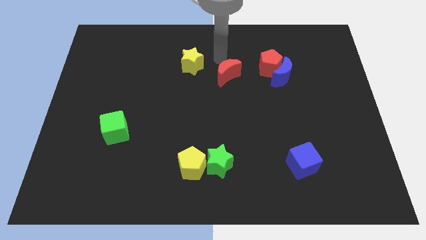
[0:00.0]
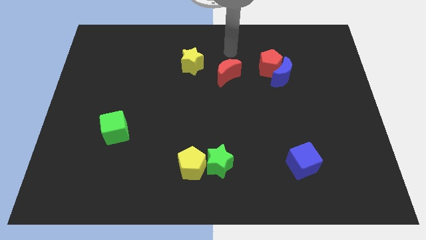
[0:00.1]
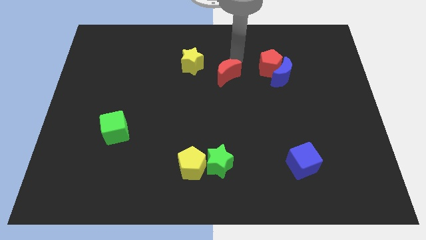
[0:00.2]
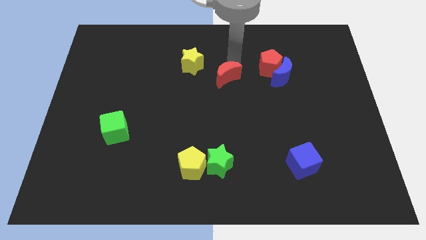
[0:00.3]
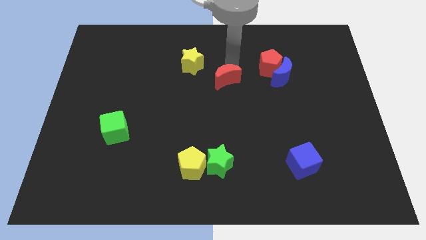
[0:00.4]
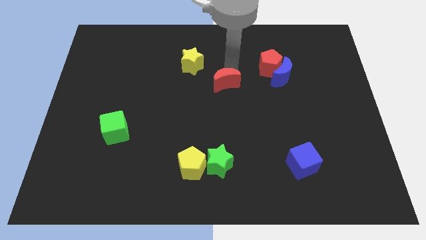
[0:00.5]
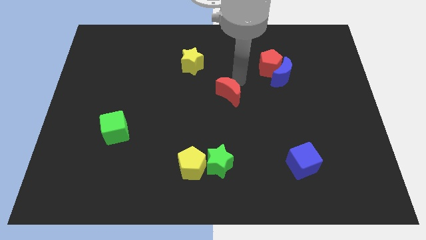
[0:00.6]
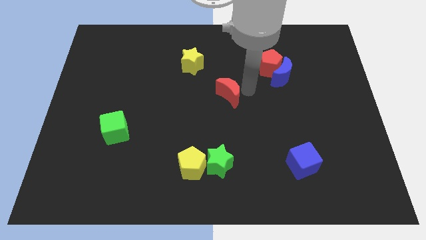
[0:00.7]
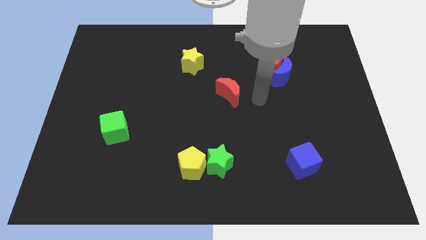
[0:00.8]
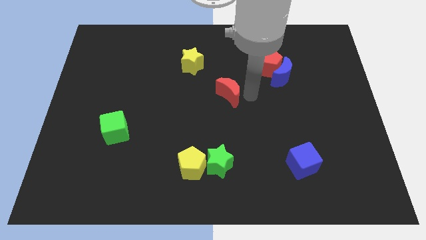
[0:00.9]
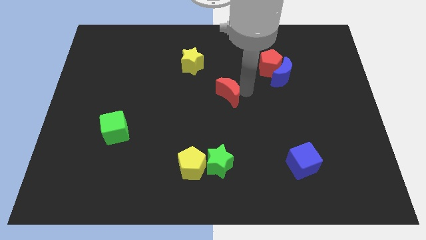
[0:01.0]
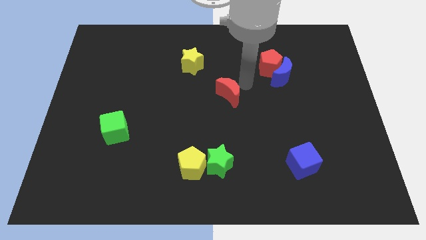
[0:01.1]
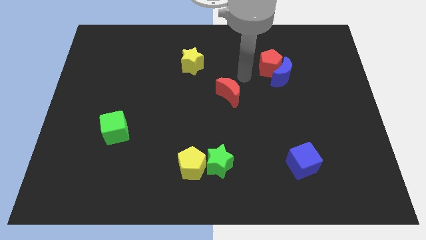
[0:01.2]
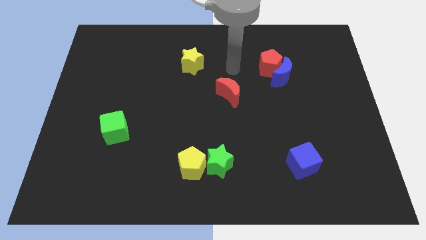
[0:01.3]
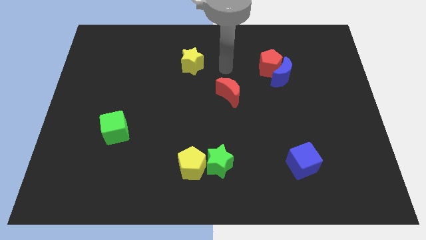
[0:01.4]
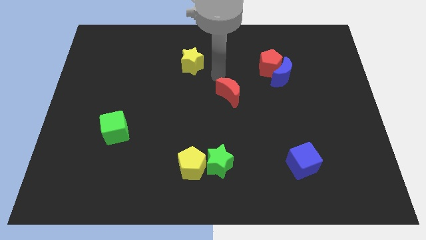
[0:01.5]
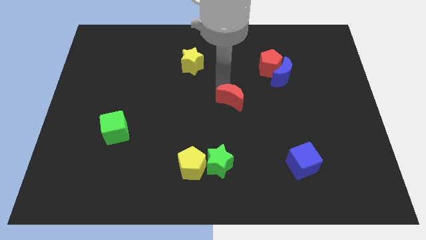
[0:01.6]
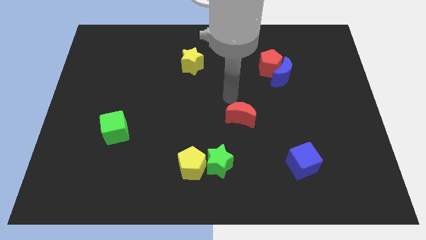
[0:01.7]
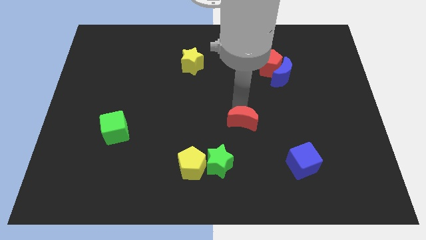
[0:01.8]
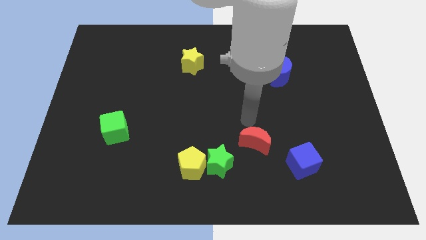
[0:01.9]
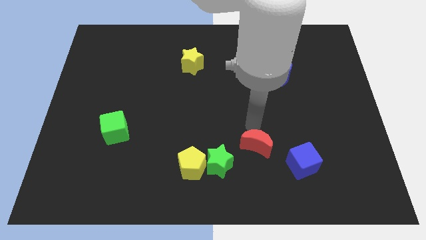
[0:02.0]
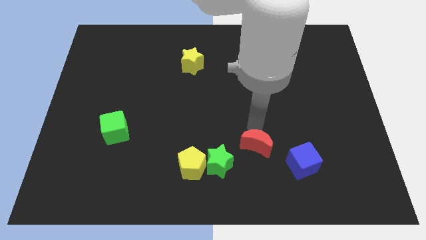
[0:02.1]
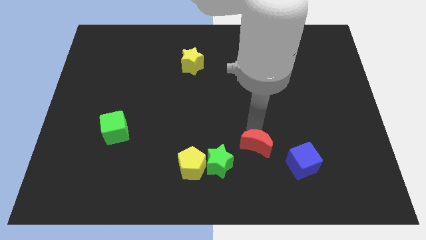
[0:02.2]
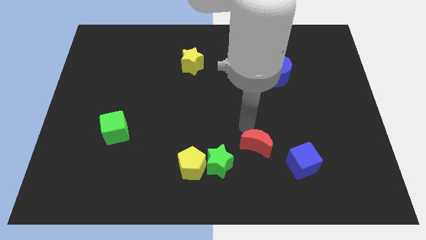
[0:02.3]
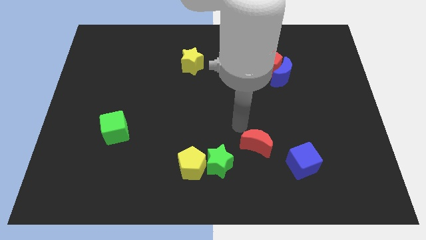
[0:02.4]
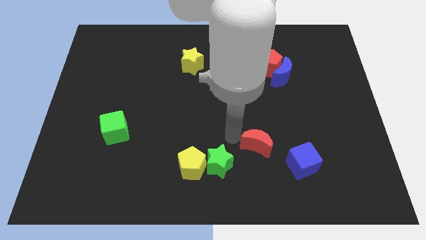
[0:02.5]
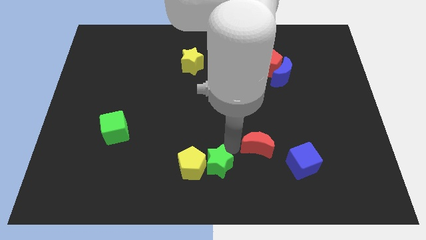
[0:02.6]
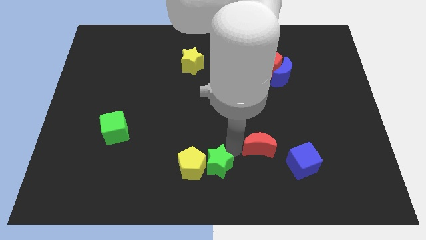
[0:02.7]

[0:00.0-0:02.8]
place the red moon to the top right of the green star

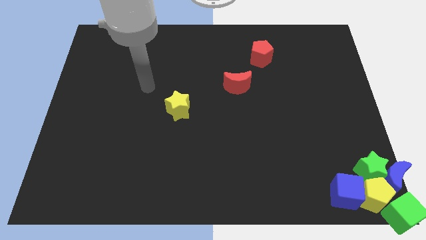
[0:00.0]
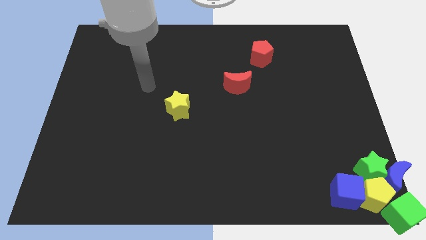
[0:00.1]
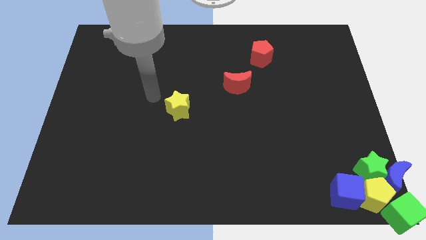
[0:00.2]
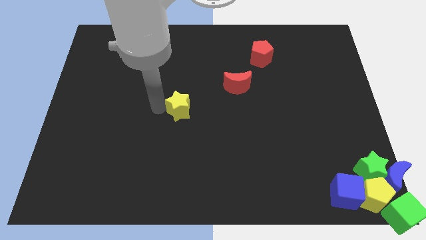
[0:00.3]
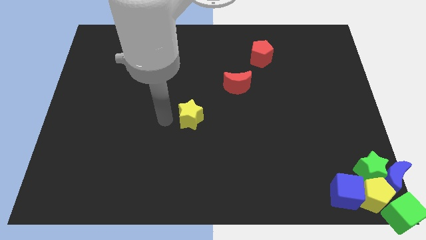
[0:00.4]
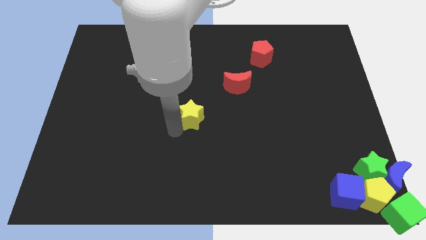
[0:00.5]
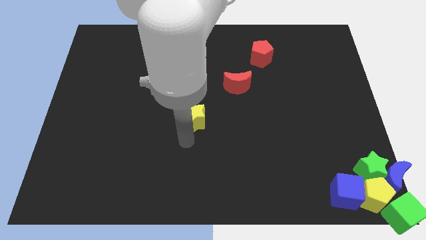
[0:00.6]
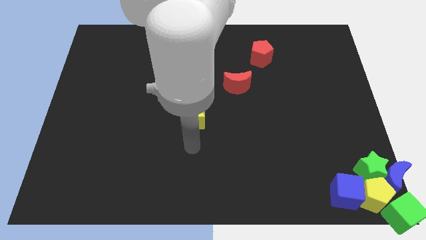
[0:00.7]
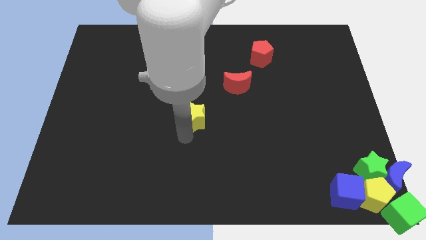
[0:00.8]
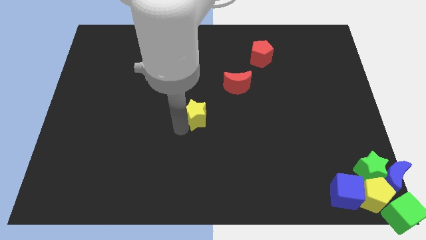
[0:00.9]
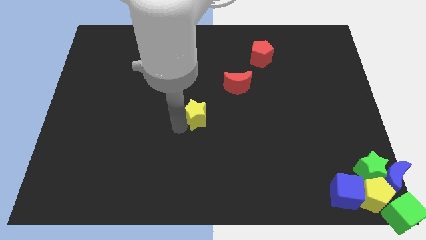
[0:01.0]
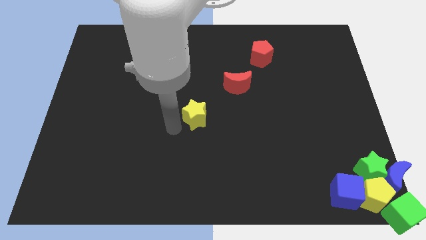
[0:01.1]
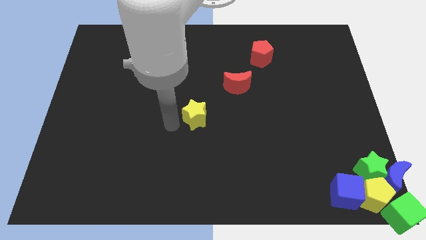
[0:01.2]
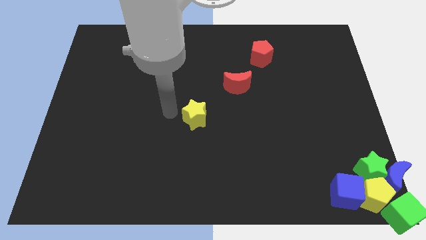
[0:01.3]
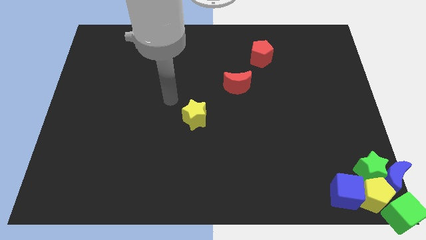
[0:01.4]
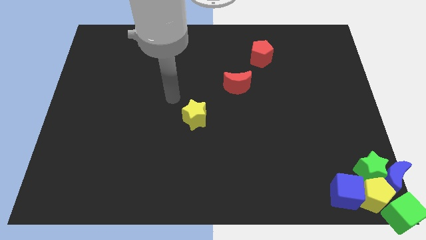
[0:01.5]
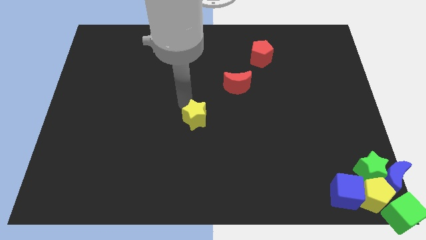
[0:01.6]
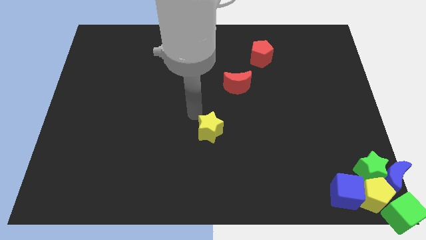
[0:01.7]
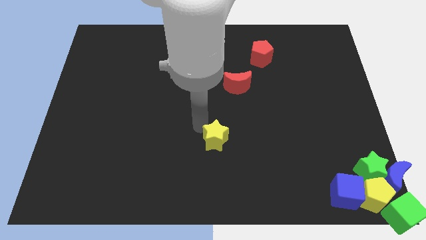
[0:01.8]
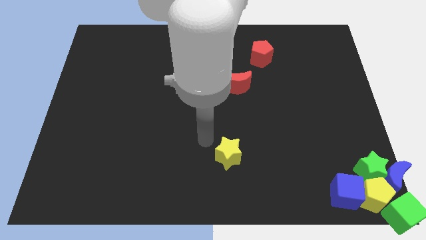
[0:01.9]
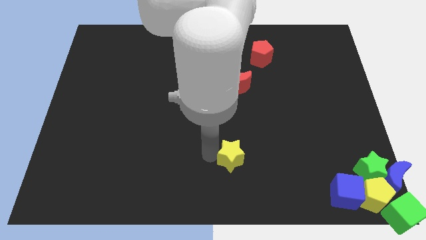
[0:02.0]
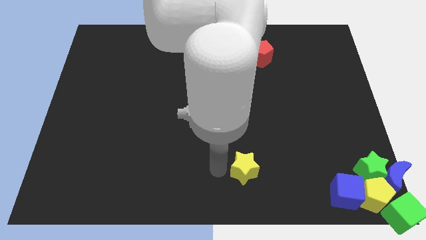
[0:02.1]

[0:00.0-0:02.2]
push the yellow star to the bottom of the red crescent

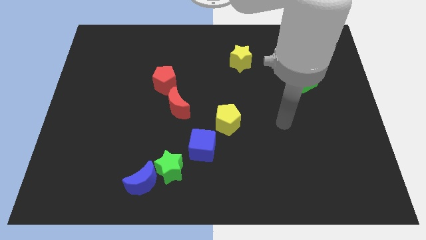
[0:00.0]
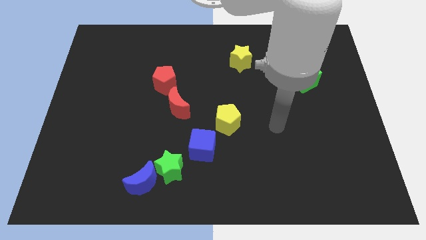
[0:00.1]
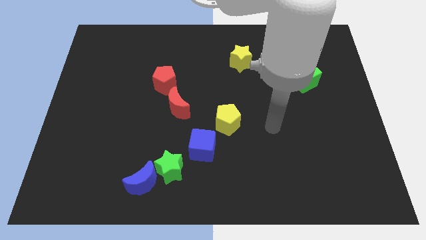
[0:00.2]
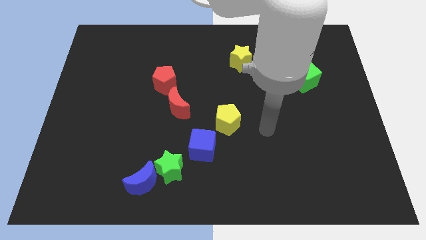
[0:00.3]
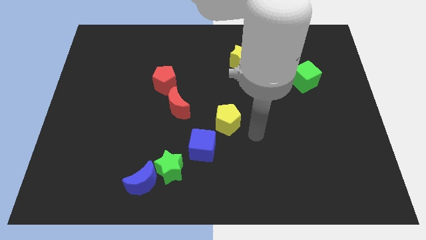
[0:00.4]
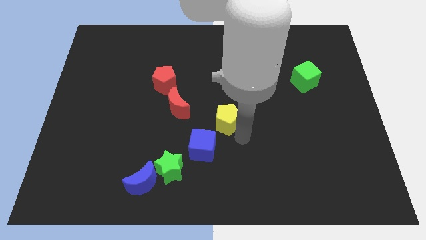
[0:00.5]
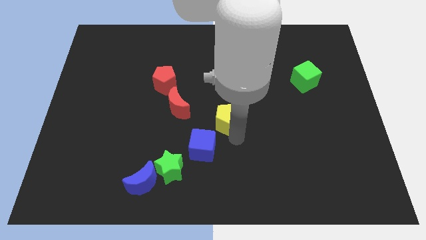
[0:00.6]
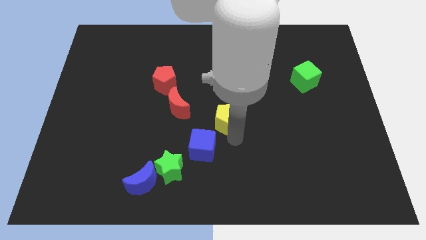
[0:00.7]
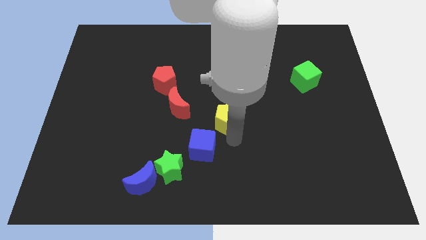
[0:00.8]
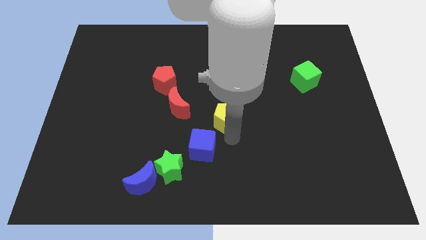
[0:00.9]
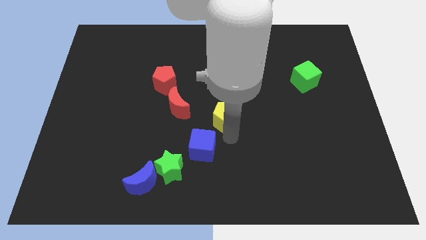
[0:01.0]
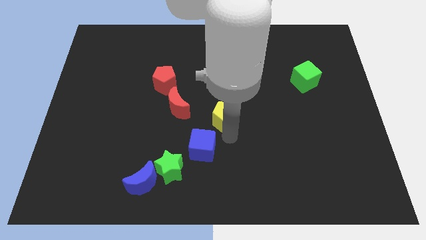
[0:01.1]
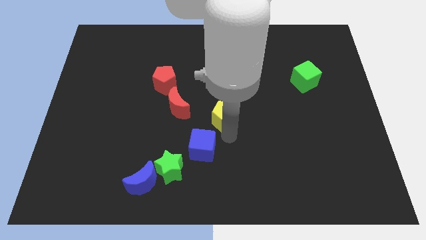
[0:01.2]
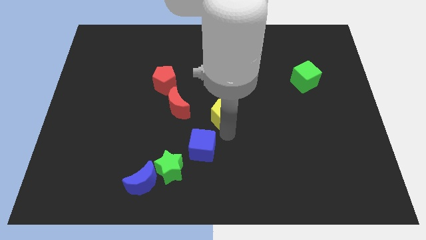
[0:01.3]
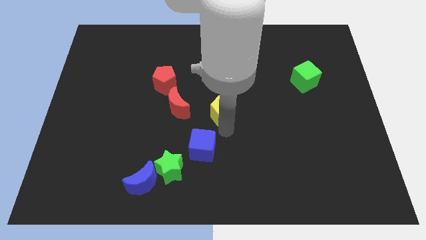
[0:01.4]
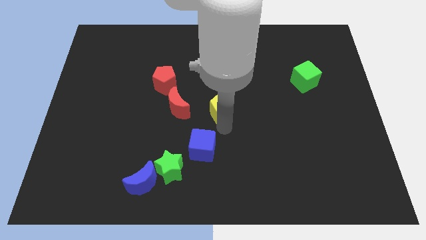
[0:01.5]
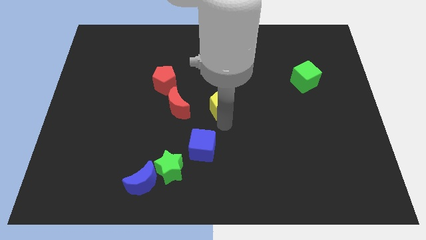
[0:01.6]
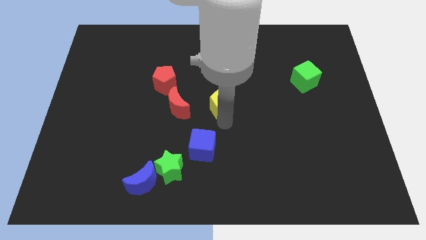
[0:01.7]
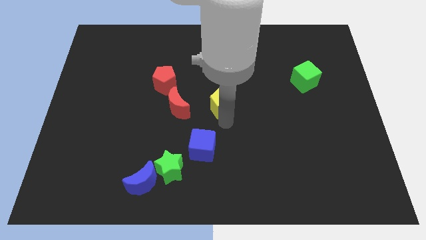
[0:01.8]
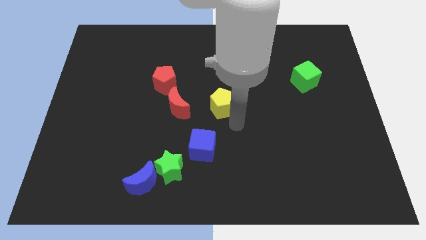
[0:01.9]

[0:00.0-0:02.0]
place the yellow pentagon at the centre of the board

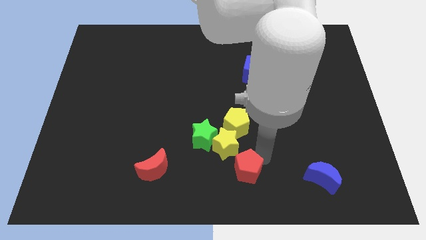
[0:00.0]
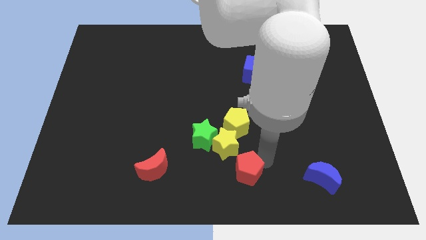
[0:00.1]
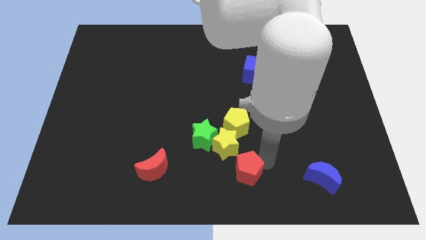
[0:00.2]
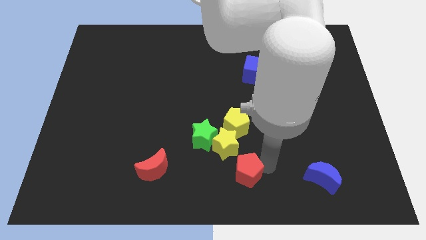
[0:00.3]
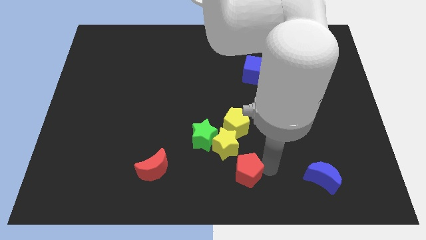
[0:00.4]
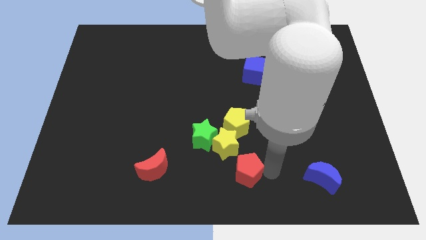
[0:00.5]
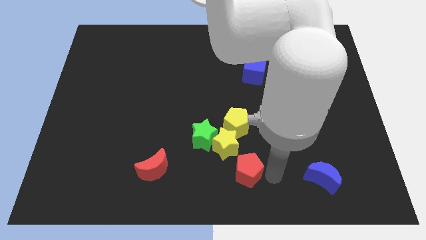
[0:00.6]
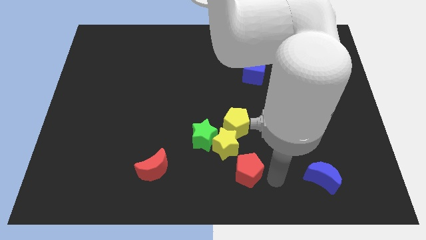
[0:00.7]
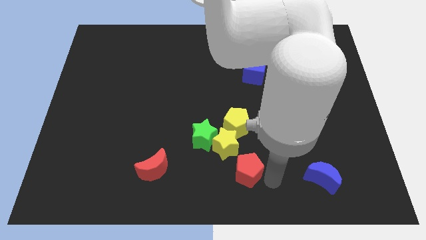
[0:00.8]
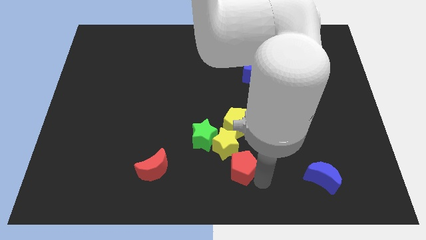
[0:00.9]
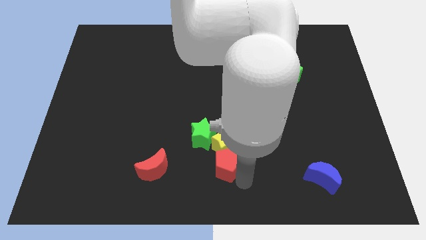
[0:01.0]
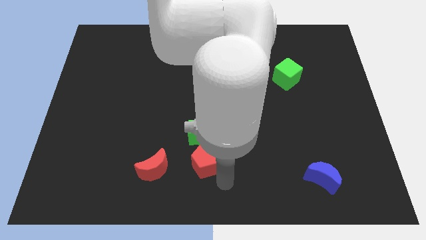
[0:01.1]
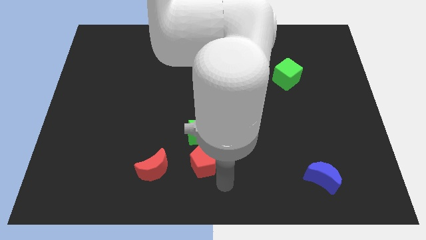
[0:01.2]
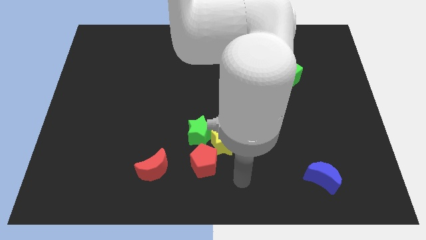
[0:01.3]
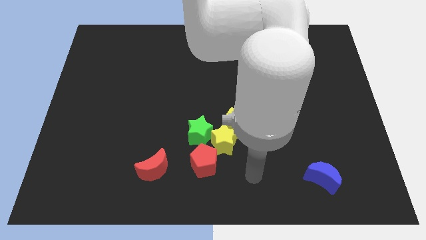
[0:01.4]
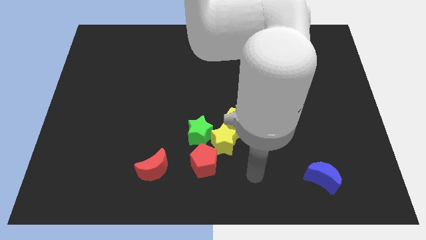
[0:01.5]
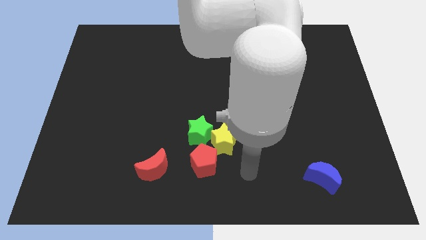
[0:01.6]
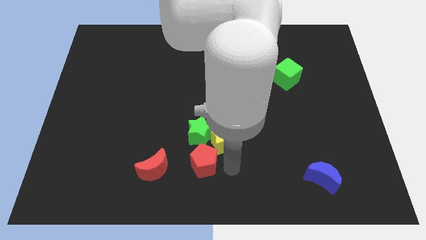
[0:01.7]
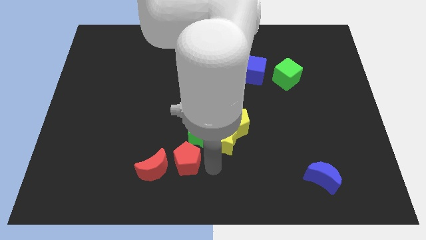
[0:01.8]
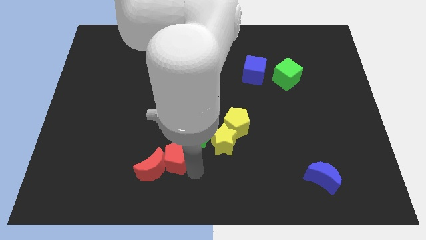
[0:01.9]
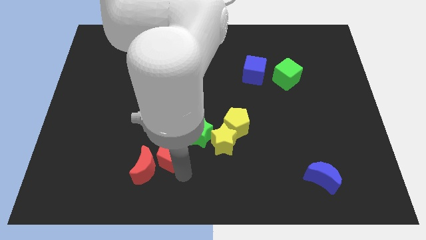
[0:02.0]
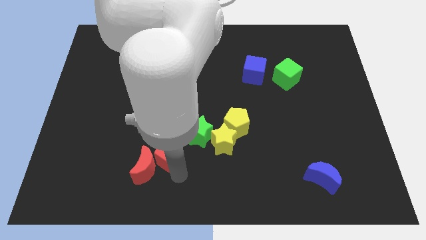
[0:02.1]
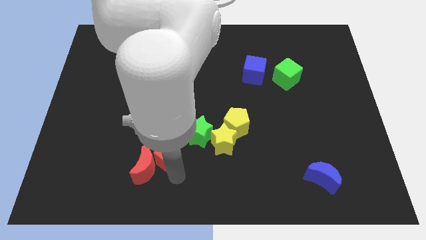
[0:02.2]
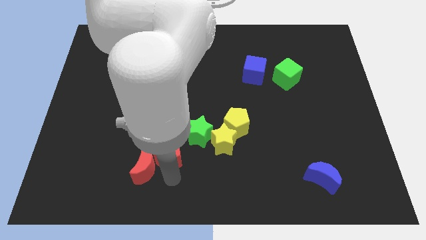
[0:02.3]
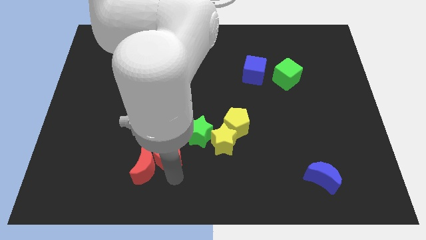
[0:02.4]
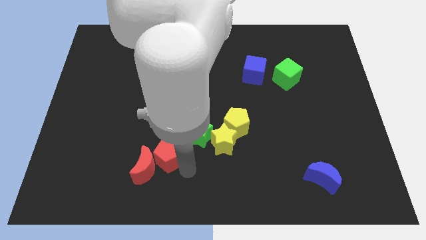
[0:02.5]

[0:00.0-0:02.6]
slide the red pentagon into the red crescent
